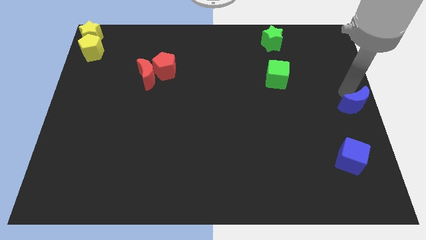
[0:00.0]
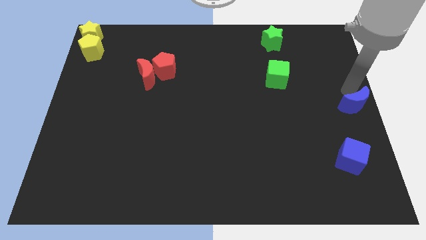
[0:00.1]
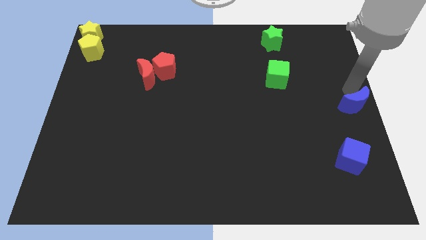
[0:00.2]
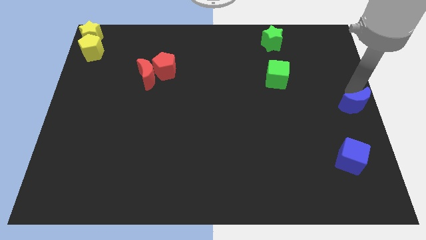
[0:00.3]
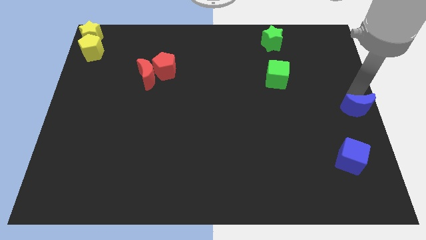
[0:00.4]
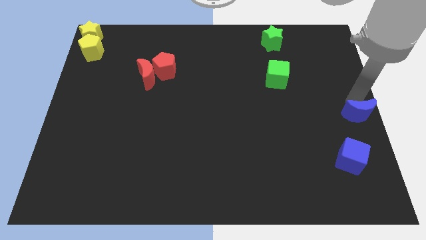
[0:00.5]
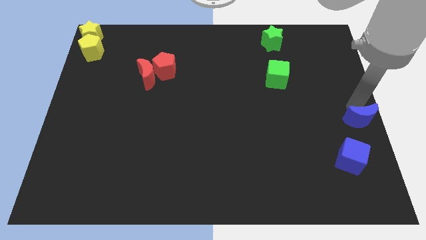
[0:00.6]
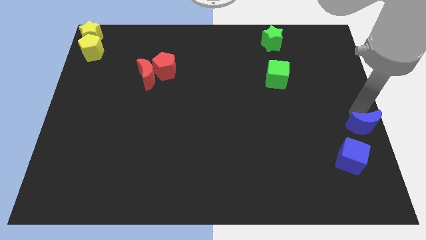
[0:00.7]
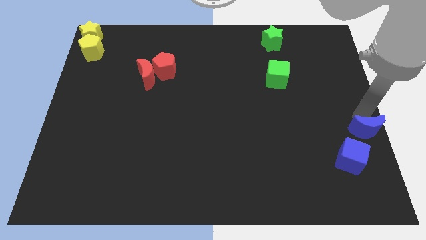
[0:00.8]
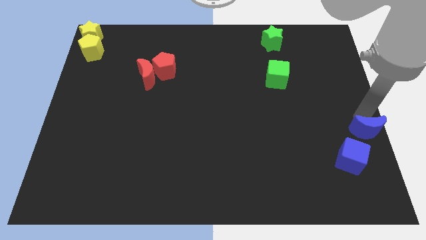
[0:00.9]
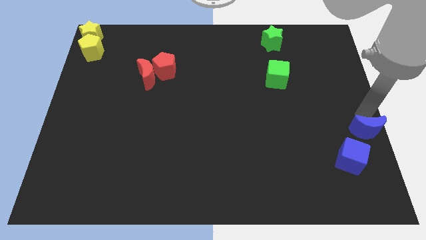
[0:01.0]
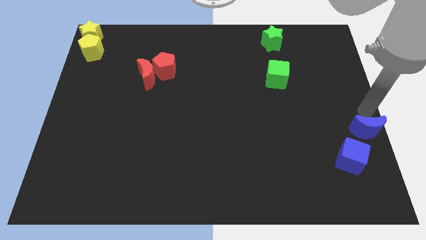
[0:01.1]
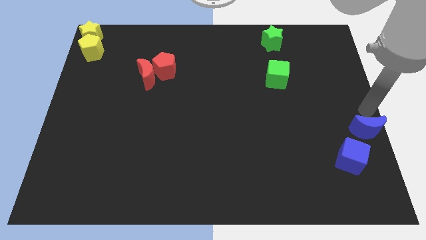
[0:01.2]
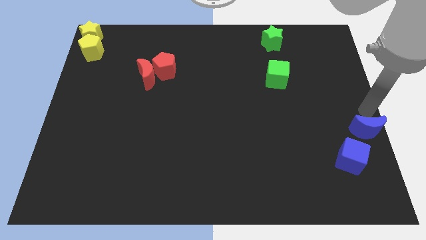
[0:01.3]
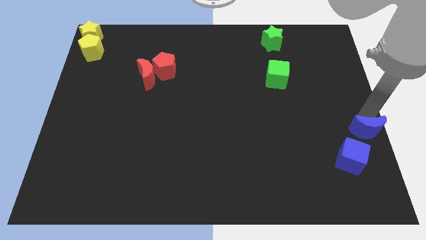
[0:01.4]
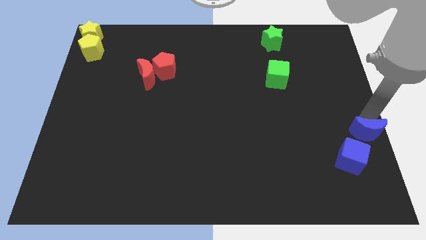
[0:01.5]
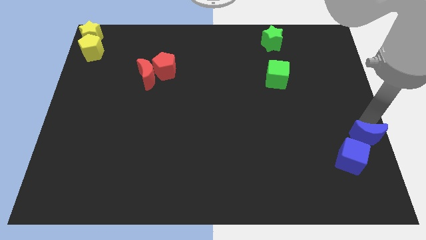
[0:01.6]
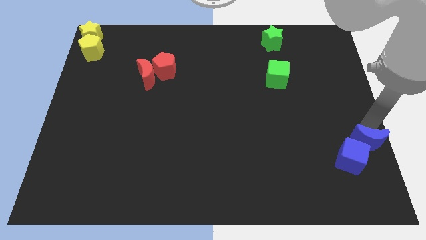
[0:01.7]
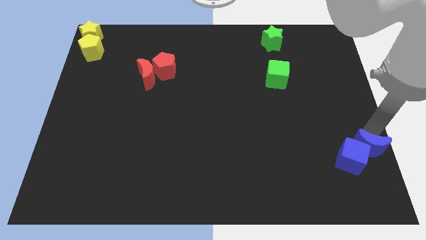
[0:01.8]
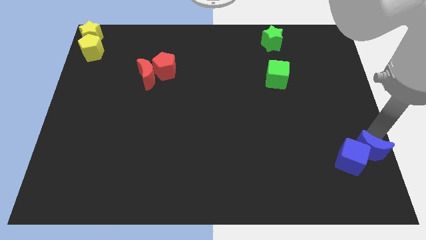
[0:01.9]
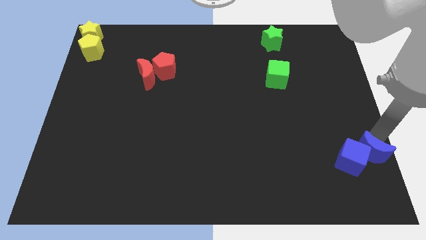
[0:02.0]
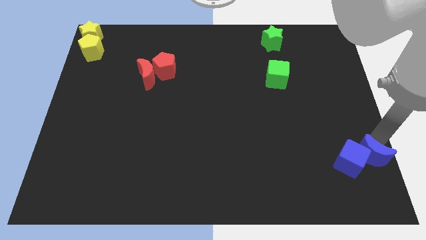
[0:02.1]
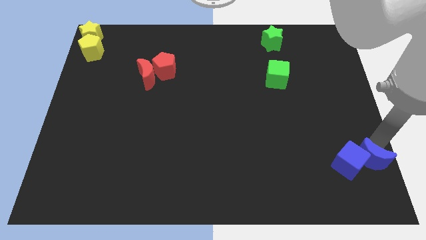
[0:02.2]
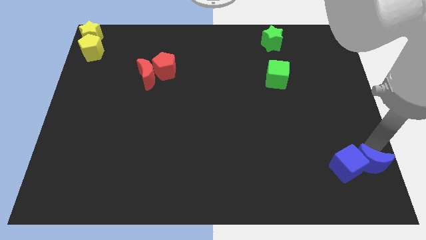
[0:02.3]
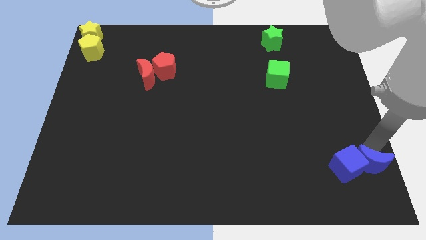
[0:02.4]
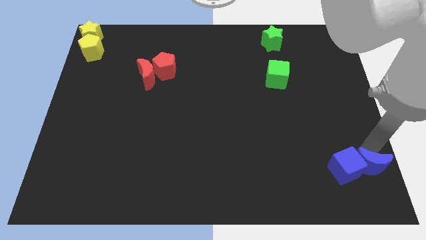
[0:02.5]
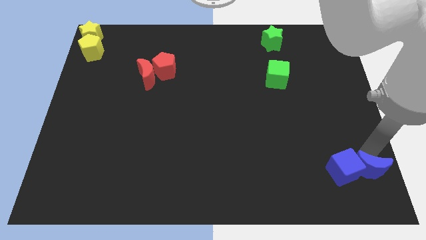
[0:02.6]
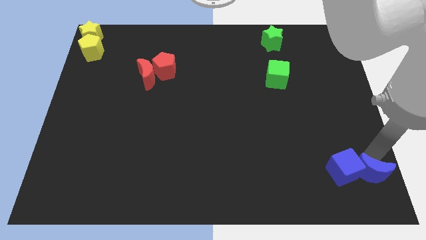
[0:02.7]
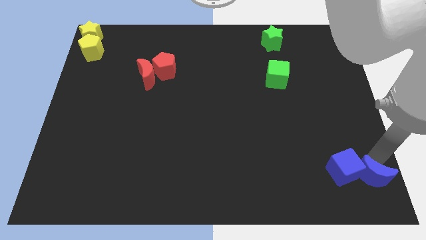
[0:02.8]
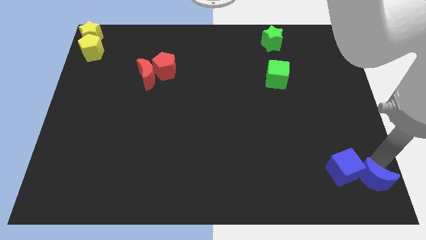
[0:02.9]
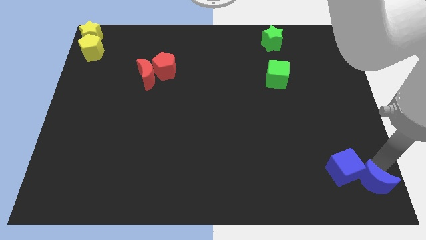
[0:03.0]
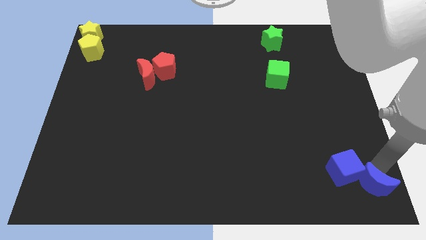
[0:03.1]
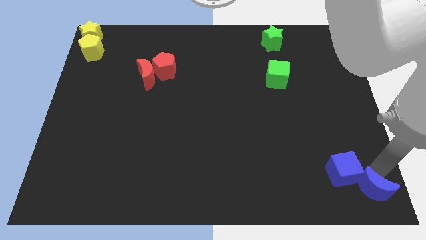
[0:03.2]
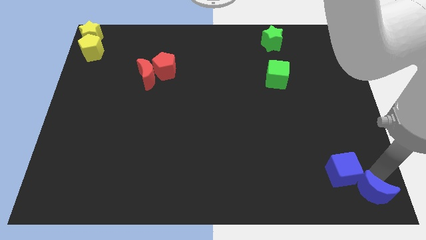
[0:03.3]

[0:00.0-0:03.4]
push the blue crescent to the bottom right to the board

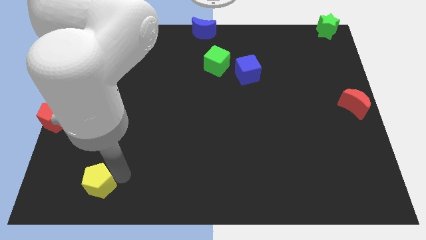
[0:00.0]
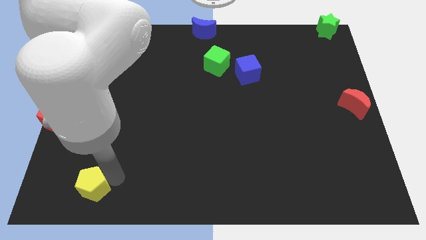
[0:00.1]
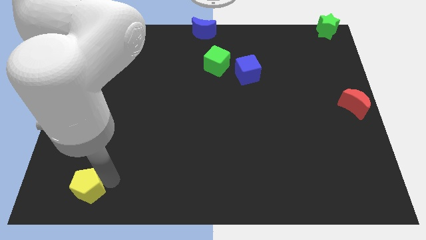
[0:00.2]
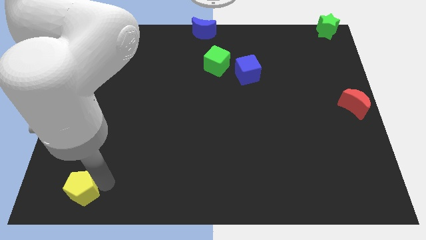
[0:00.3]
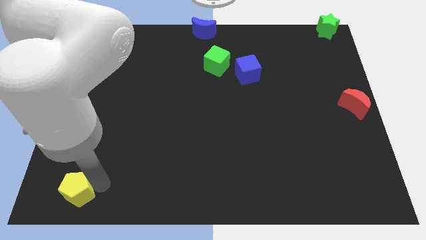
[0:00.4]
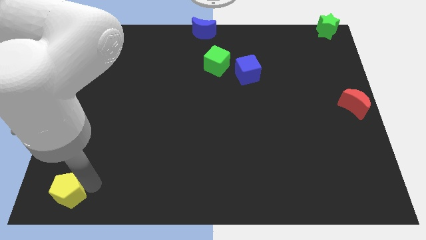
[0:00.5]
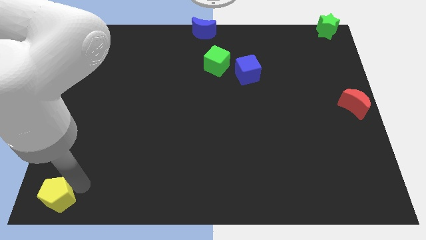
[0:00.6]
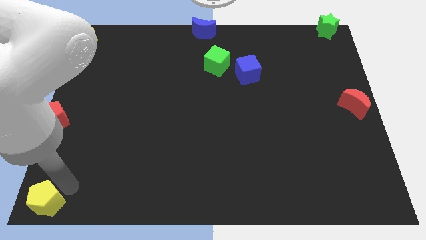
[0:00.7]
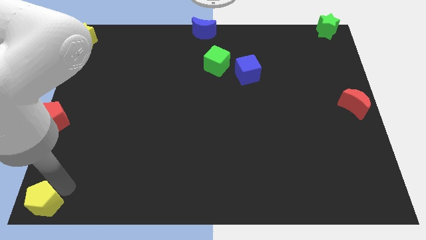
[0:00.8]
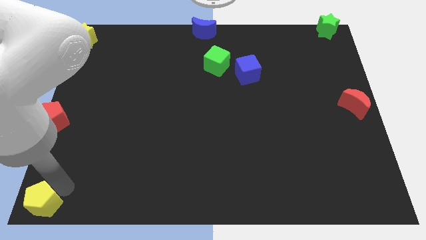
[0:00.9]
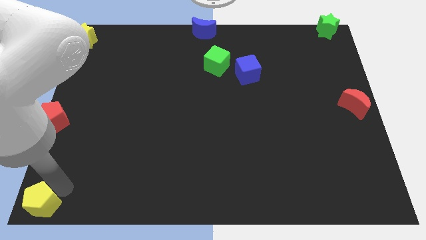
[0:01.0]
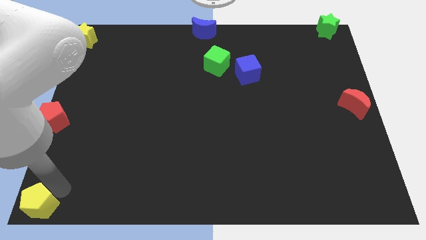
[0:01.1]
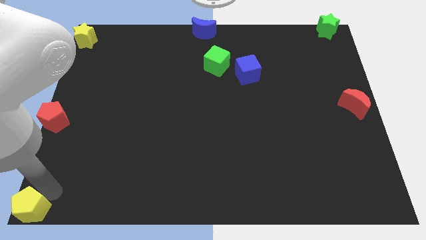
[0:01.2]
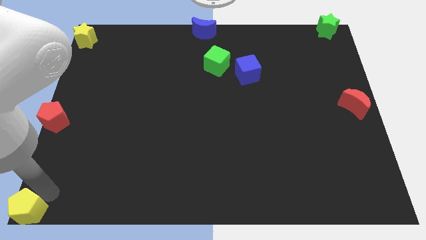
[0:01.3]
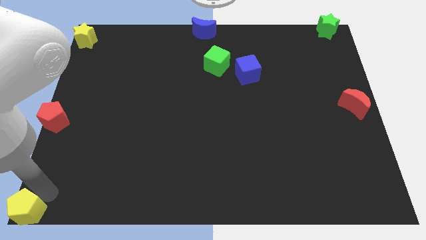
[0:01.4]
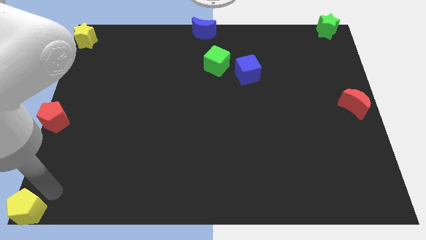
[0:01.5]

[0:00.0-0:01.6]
put the yellow pentagon at the bottom left side of the board

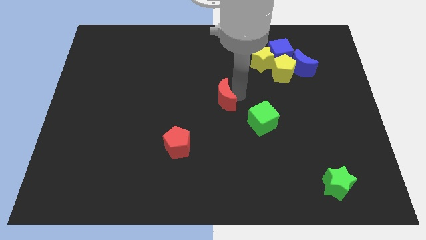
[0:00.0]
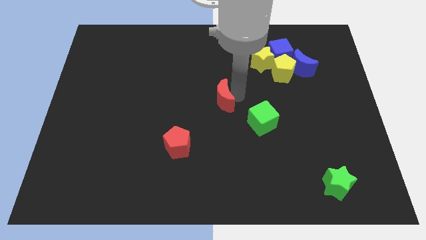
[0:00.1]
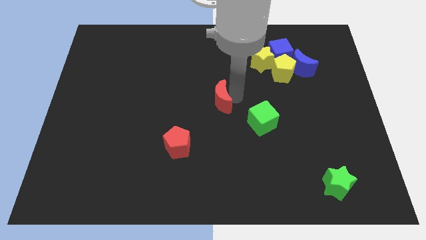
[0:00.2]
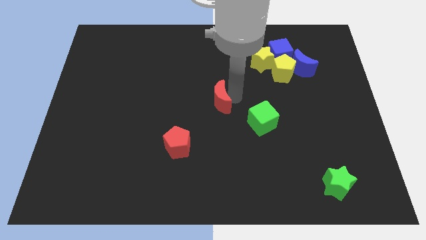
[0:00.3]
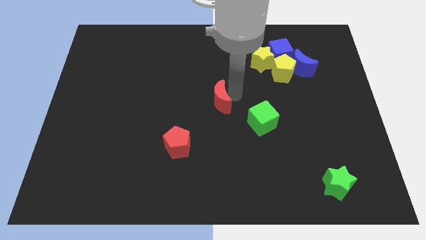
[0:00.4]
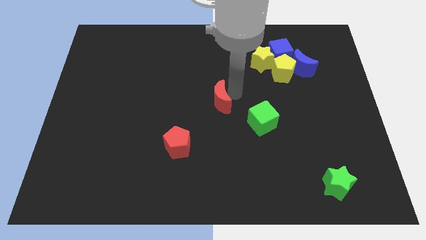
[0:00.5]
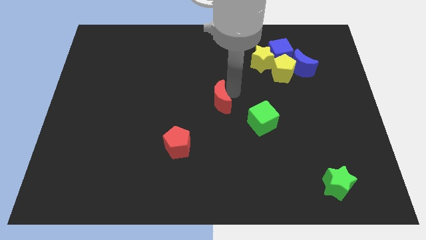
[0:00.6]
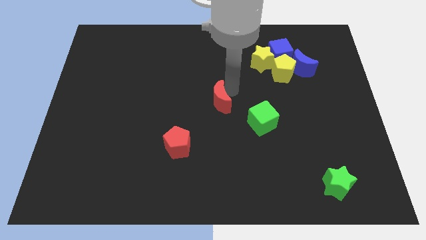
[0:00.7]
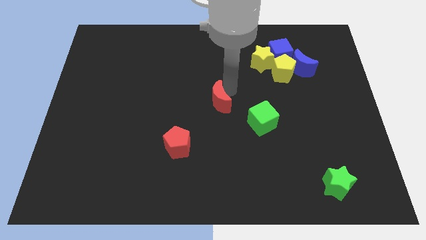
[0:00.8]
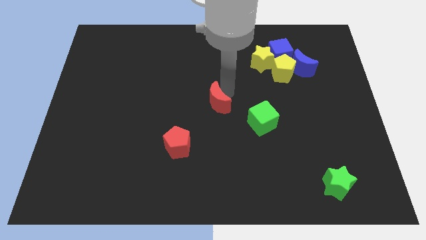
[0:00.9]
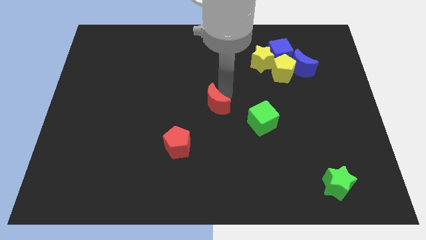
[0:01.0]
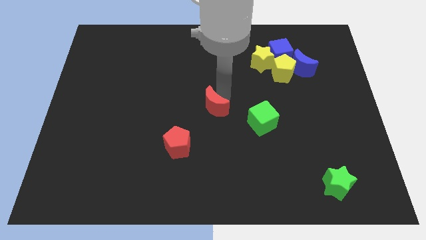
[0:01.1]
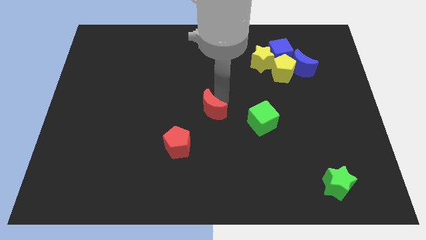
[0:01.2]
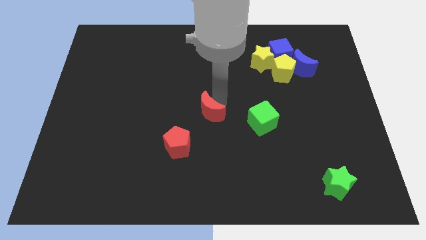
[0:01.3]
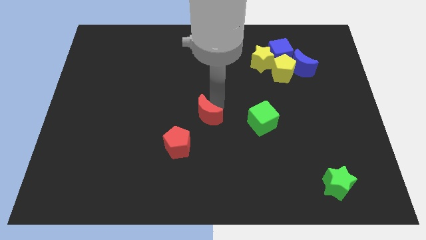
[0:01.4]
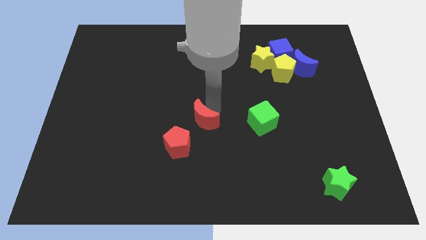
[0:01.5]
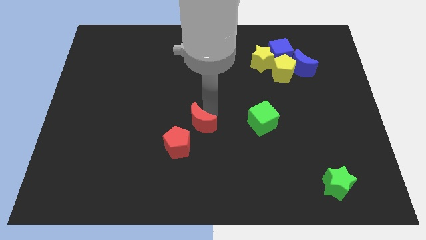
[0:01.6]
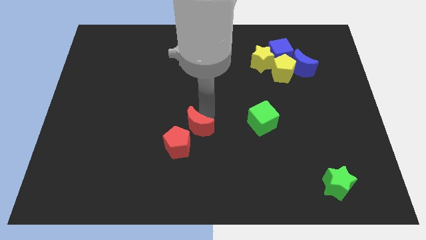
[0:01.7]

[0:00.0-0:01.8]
move the red crescent to the left of the green cube

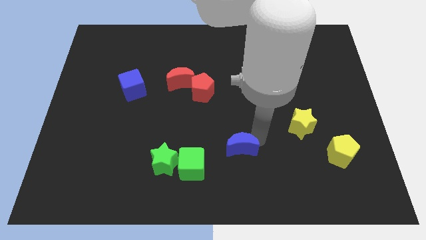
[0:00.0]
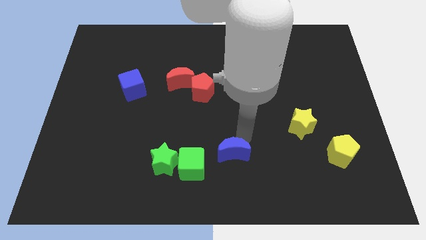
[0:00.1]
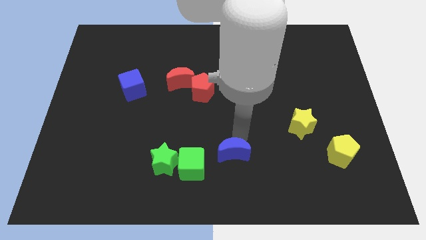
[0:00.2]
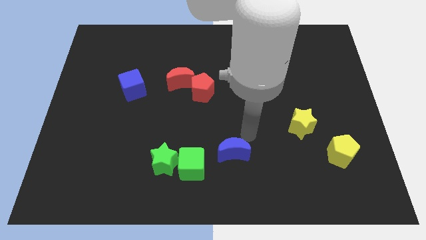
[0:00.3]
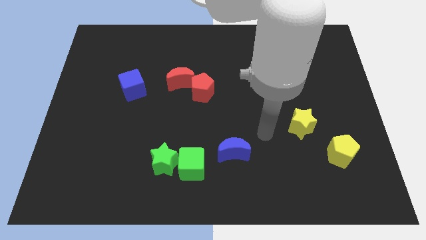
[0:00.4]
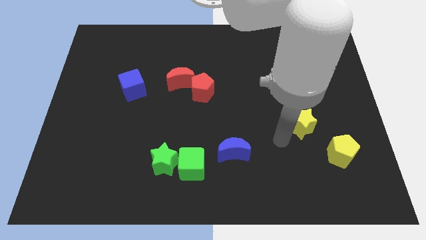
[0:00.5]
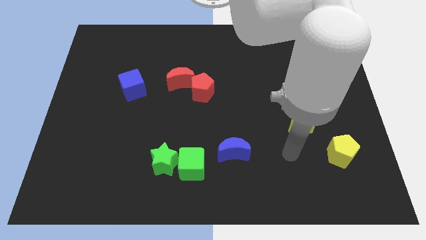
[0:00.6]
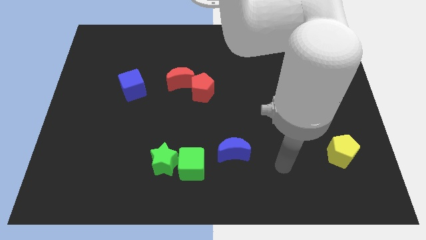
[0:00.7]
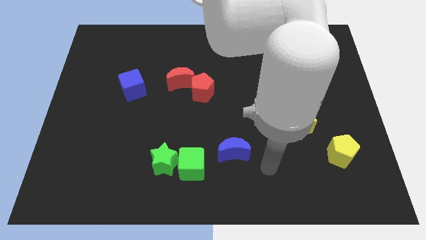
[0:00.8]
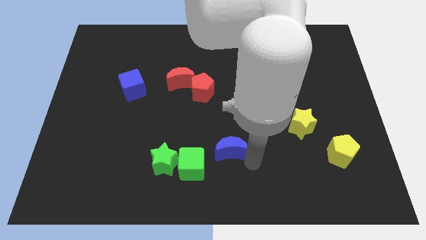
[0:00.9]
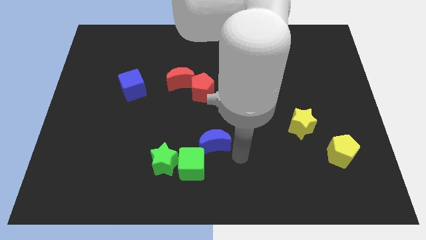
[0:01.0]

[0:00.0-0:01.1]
slide blue moon into green cube

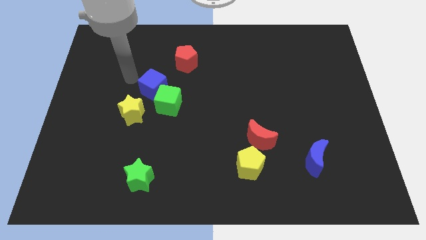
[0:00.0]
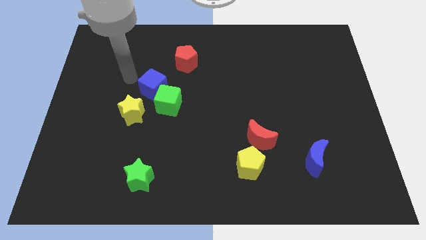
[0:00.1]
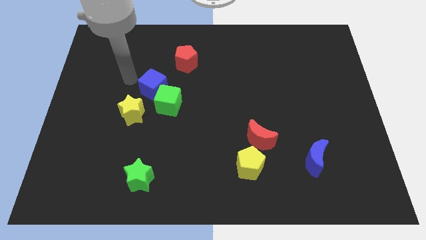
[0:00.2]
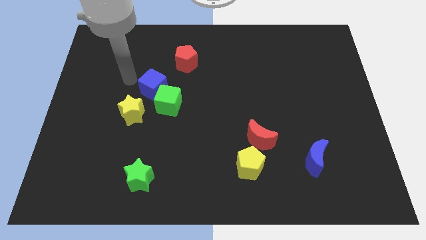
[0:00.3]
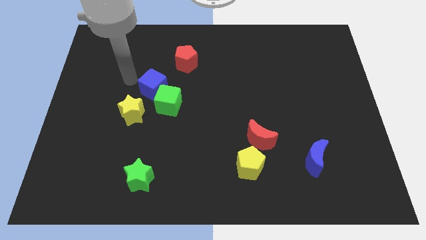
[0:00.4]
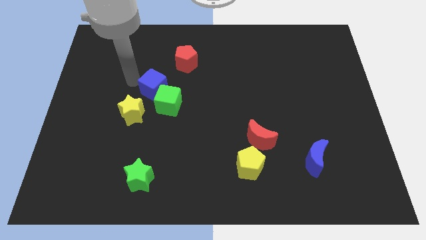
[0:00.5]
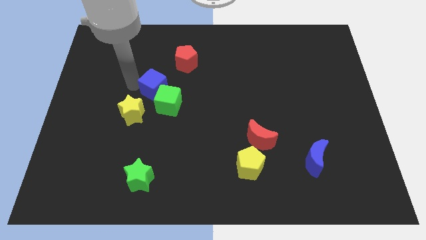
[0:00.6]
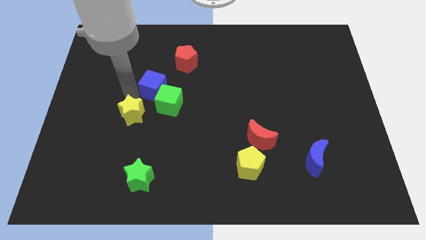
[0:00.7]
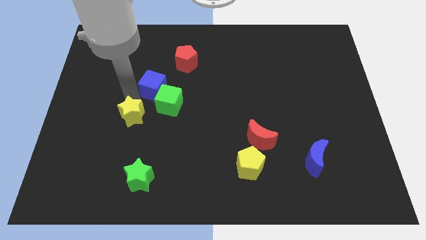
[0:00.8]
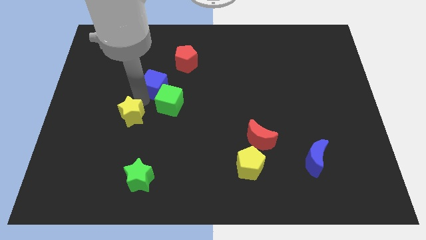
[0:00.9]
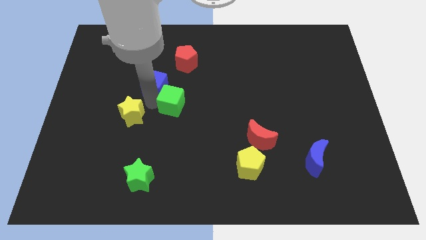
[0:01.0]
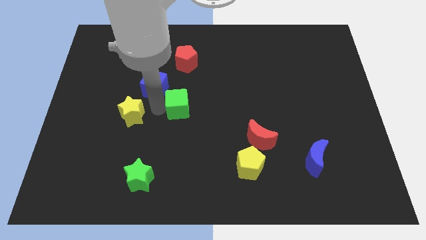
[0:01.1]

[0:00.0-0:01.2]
touch the blue cube
